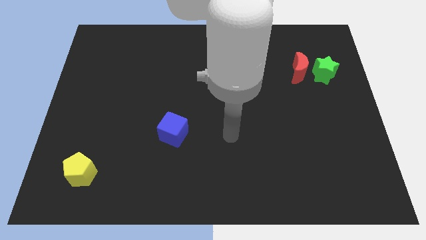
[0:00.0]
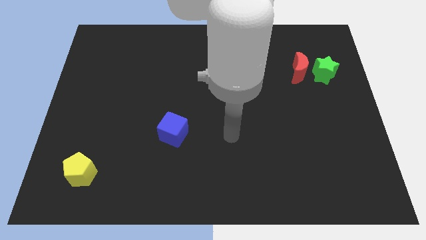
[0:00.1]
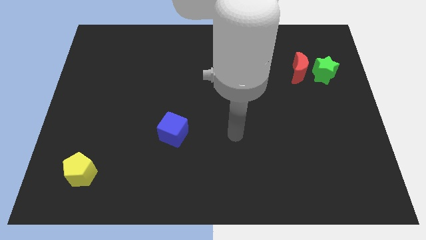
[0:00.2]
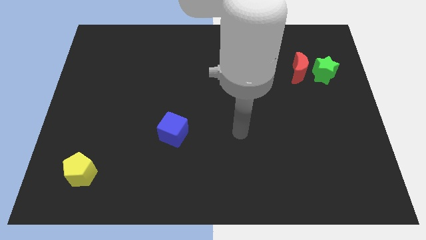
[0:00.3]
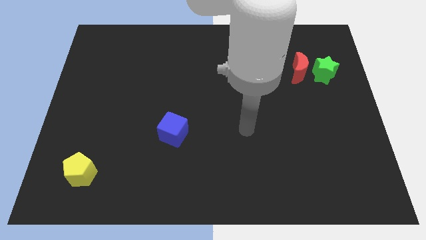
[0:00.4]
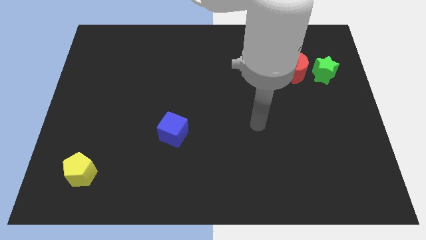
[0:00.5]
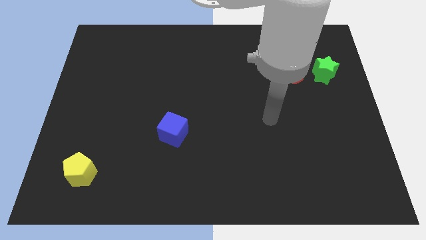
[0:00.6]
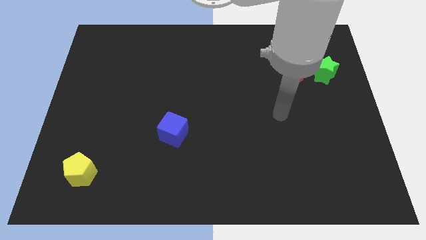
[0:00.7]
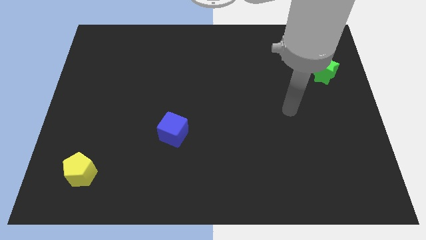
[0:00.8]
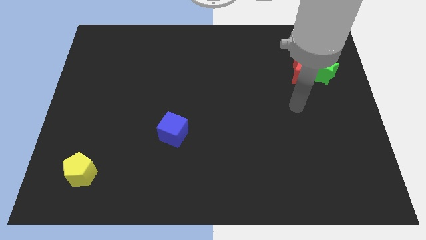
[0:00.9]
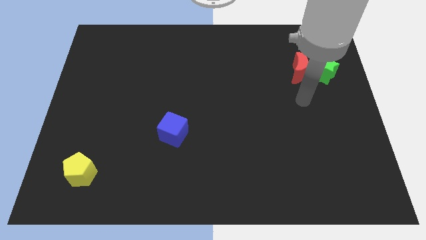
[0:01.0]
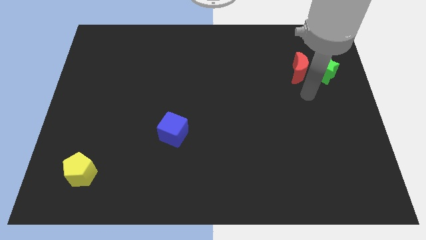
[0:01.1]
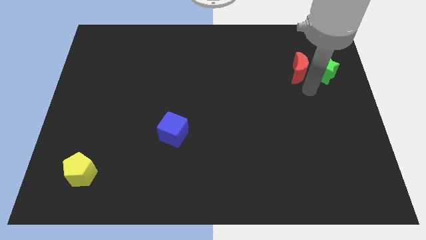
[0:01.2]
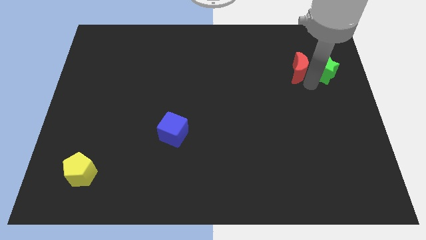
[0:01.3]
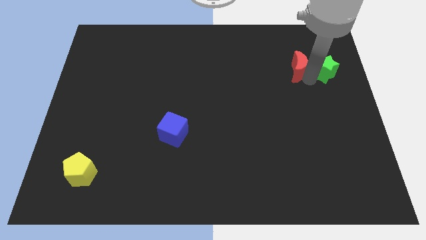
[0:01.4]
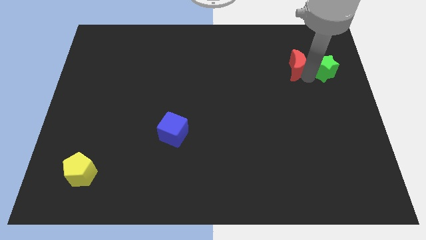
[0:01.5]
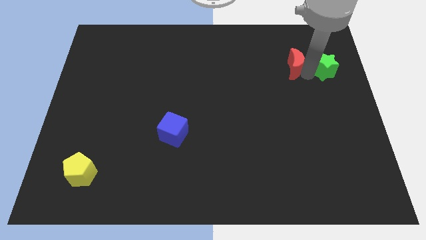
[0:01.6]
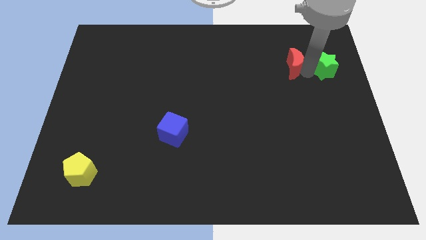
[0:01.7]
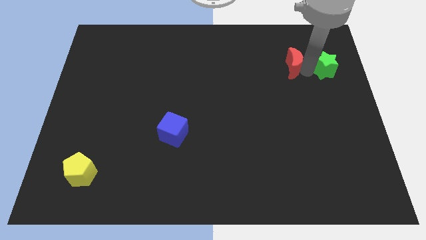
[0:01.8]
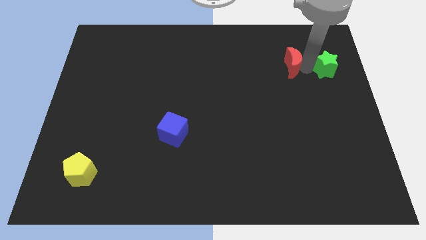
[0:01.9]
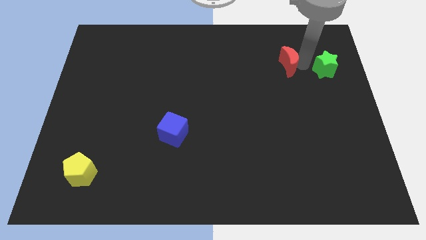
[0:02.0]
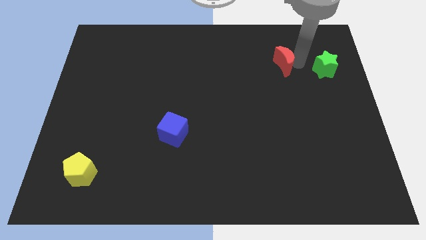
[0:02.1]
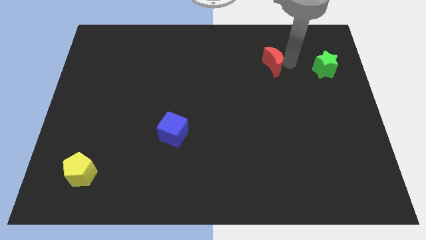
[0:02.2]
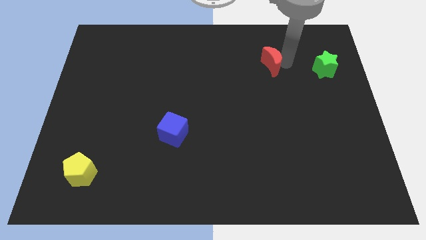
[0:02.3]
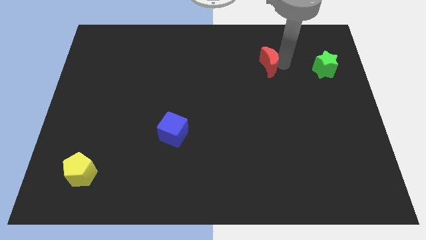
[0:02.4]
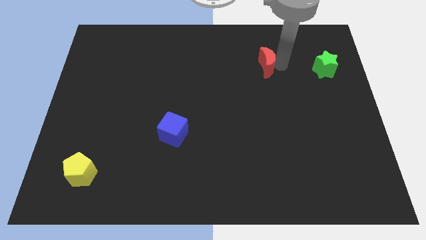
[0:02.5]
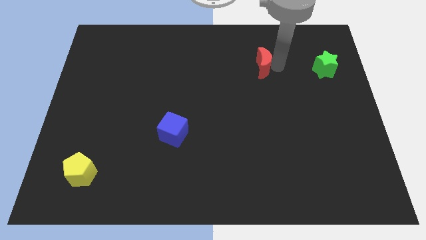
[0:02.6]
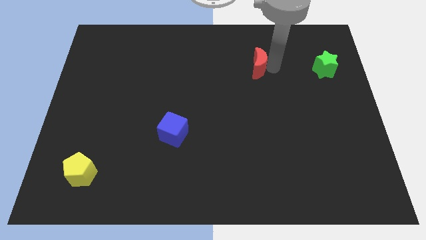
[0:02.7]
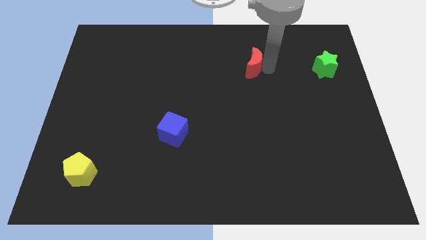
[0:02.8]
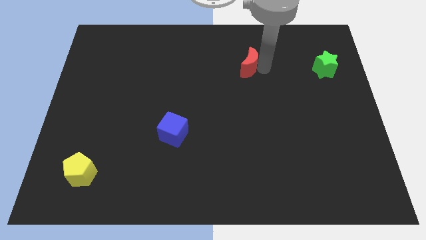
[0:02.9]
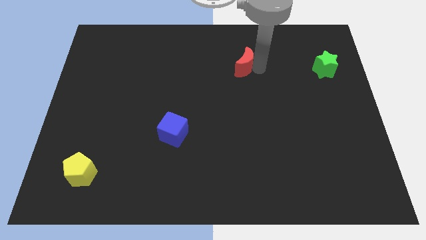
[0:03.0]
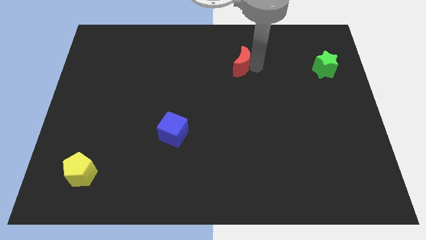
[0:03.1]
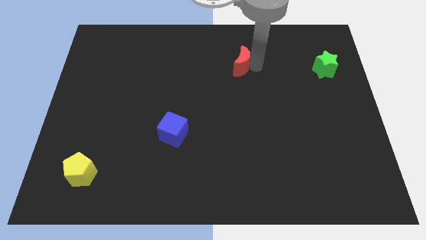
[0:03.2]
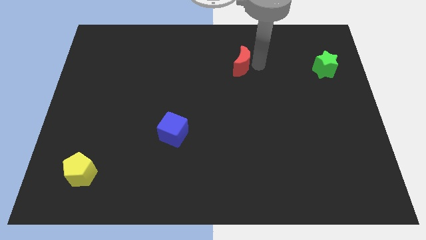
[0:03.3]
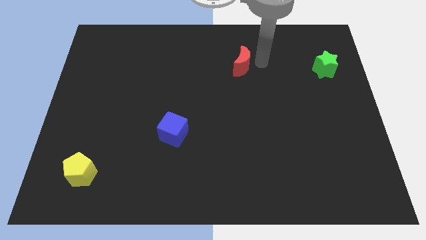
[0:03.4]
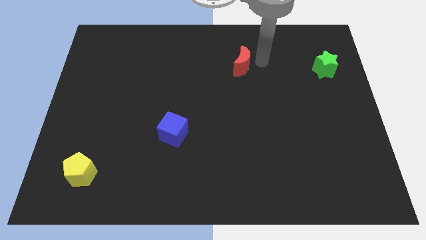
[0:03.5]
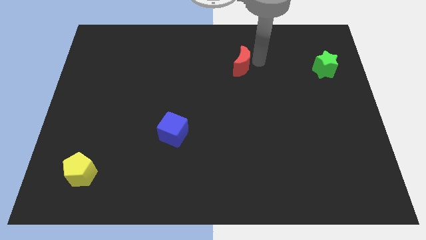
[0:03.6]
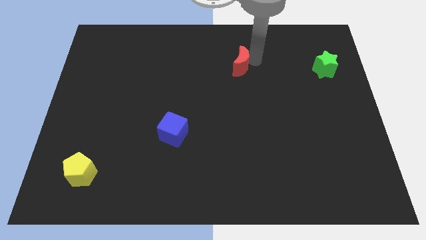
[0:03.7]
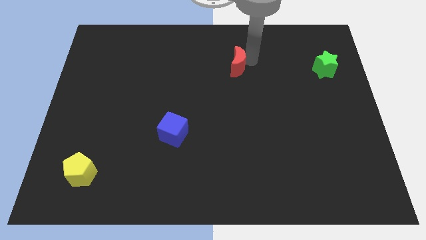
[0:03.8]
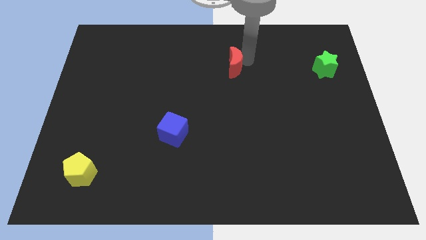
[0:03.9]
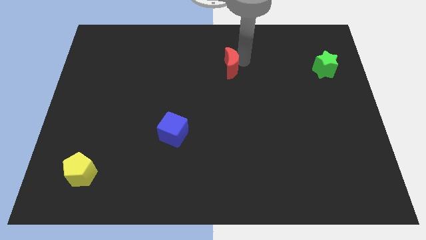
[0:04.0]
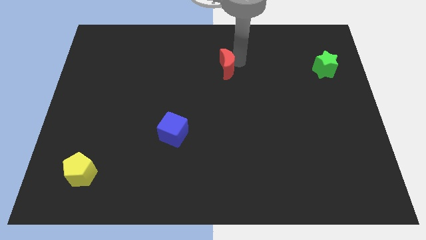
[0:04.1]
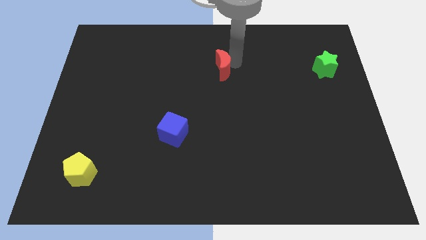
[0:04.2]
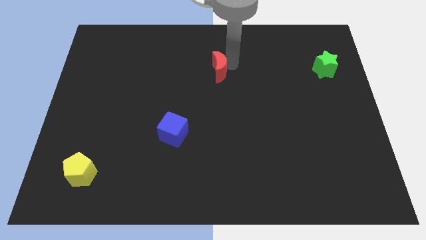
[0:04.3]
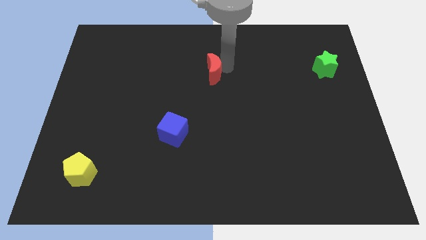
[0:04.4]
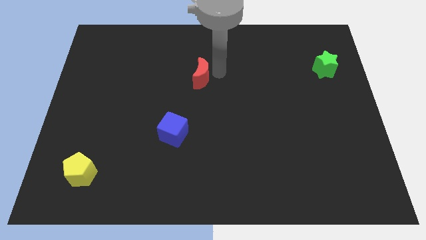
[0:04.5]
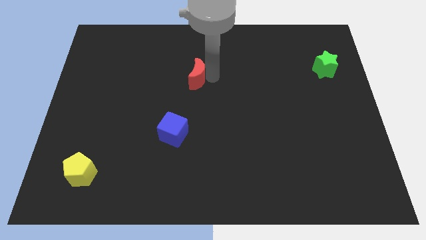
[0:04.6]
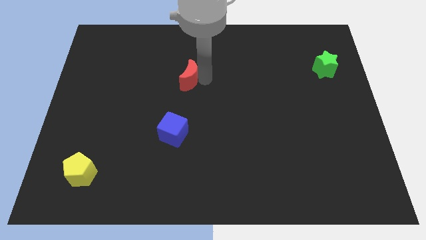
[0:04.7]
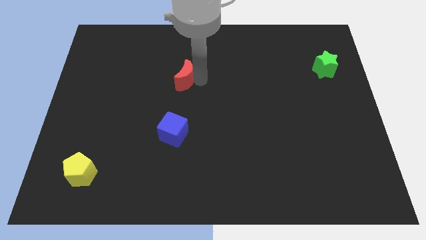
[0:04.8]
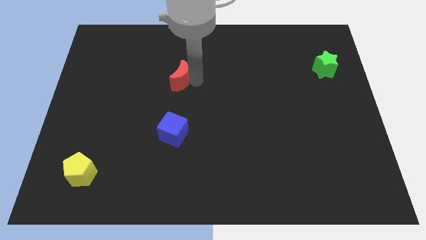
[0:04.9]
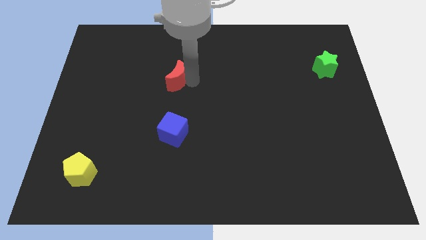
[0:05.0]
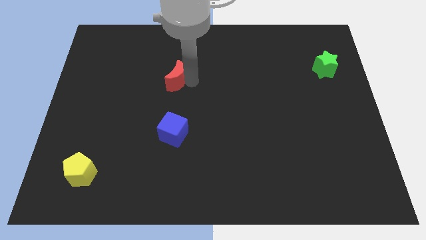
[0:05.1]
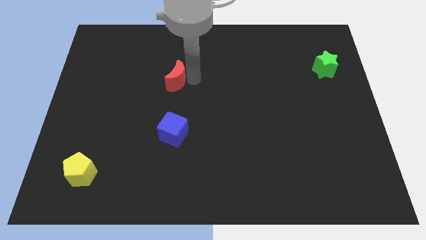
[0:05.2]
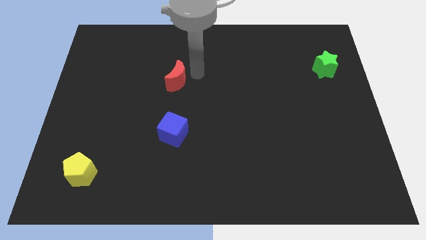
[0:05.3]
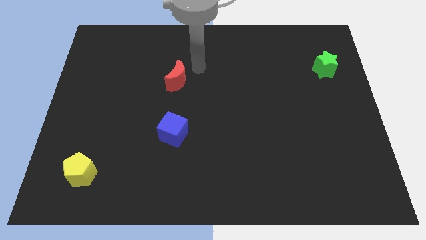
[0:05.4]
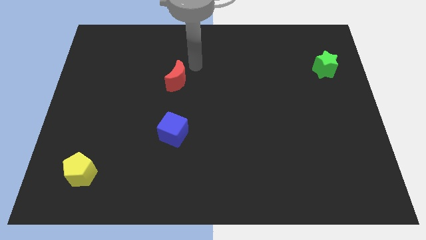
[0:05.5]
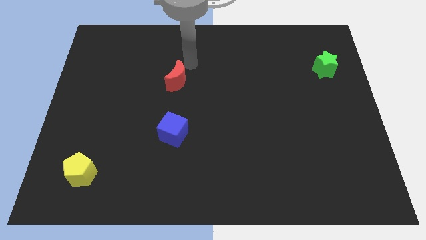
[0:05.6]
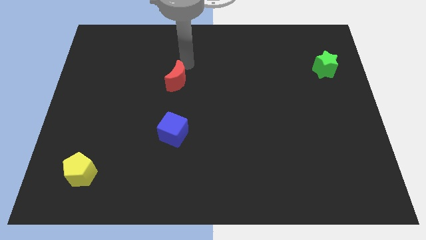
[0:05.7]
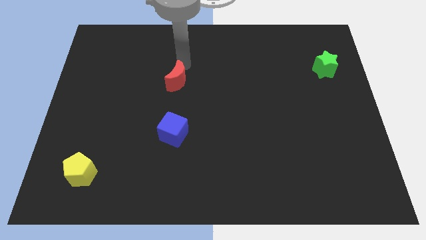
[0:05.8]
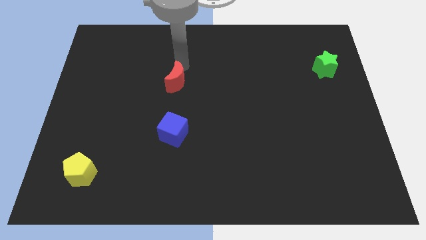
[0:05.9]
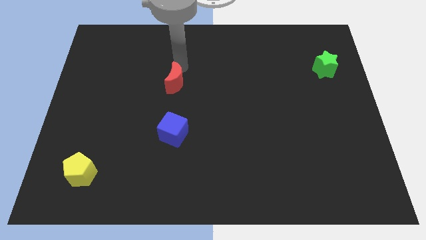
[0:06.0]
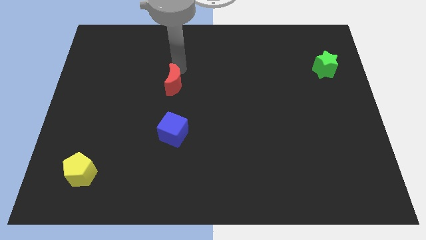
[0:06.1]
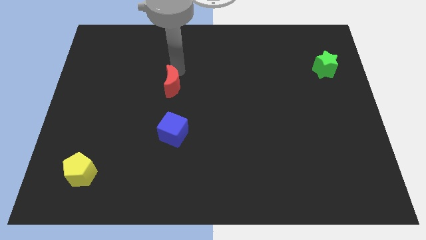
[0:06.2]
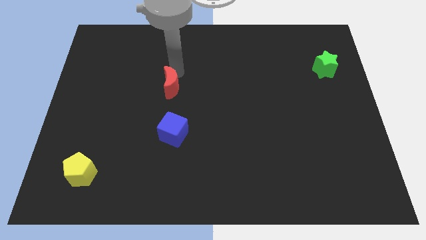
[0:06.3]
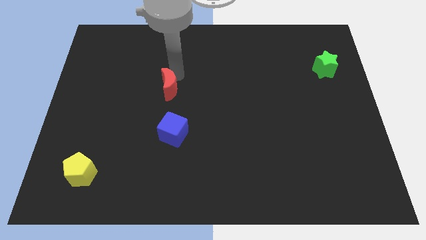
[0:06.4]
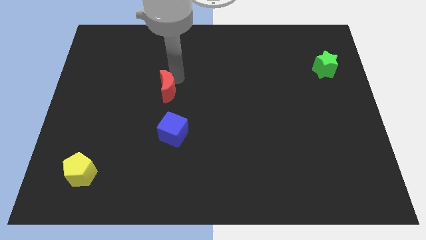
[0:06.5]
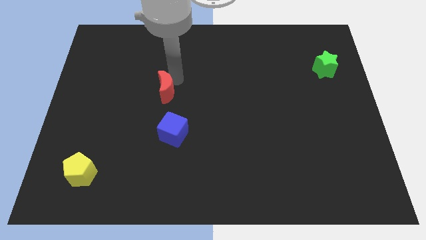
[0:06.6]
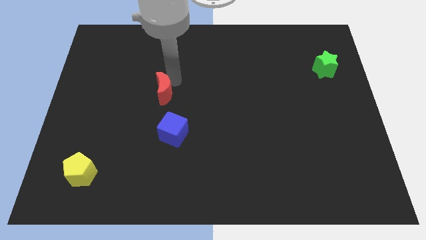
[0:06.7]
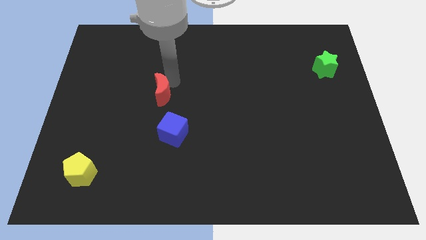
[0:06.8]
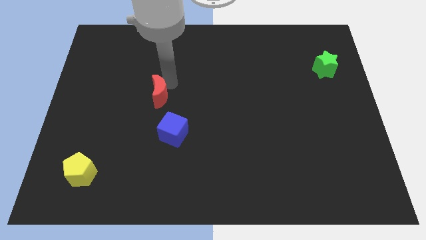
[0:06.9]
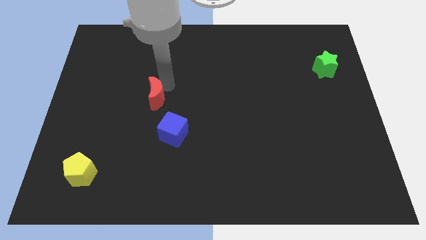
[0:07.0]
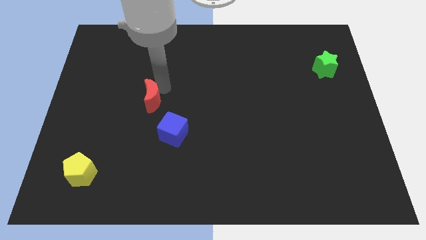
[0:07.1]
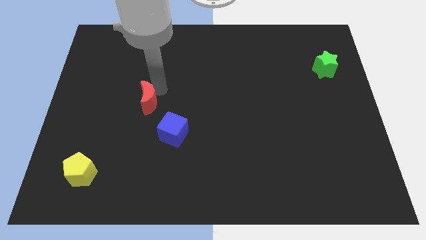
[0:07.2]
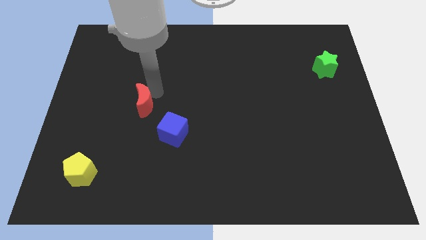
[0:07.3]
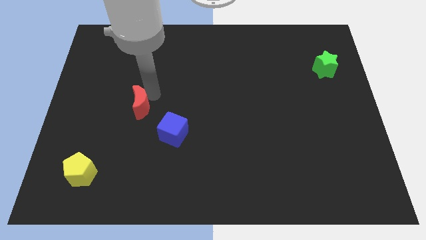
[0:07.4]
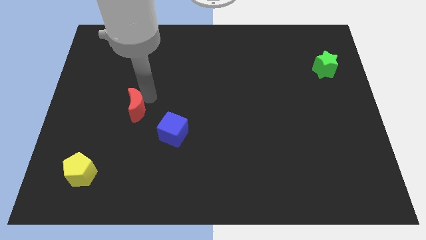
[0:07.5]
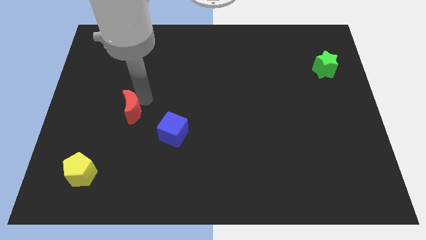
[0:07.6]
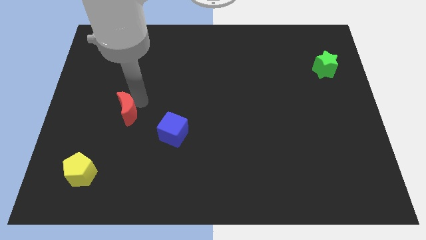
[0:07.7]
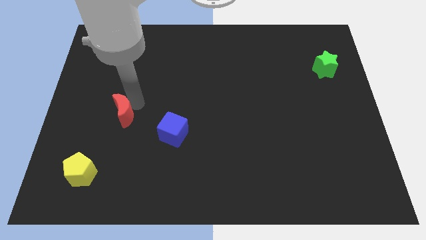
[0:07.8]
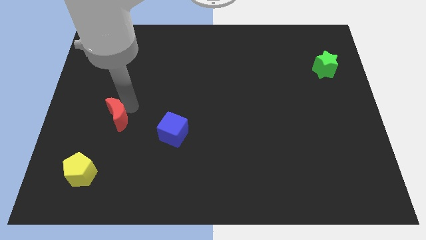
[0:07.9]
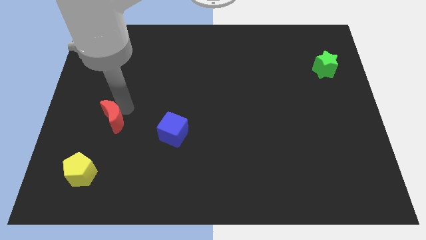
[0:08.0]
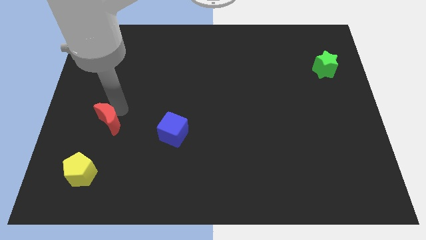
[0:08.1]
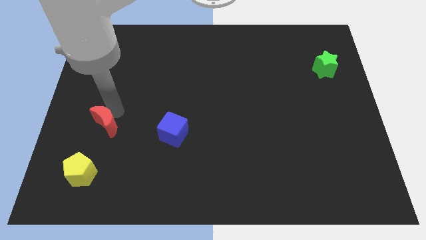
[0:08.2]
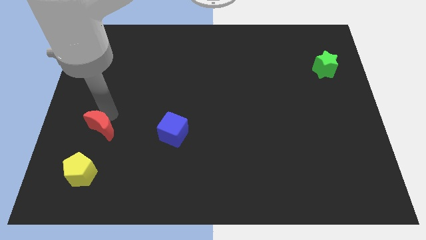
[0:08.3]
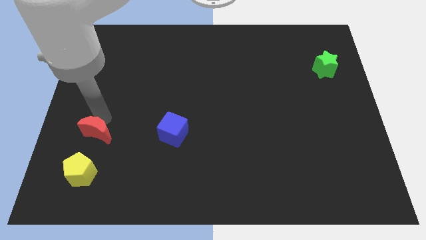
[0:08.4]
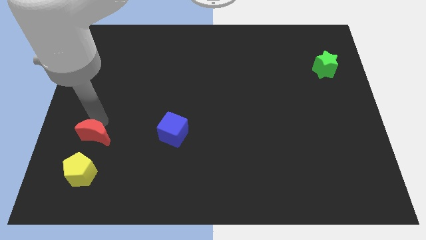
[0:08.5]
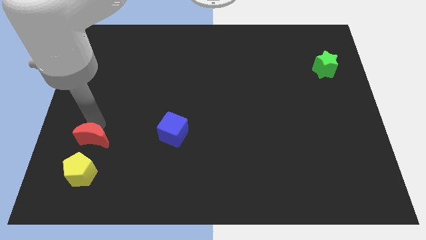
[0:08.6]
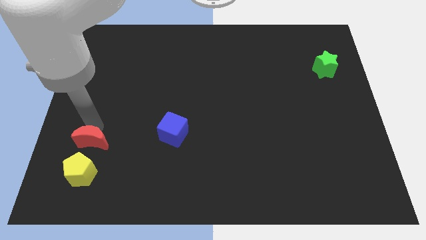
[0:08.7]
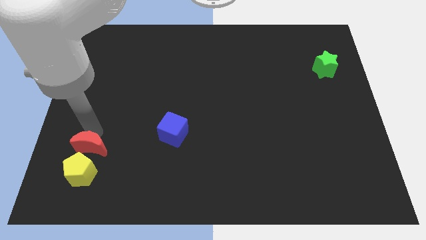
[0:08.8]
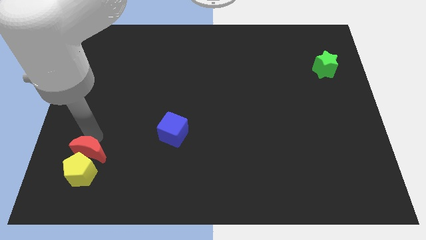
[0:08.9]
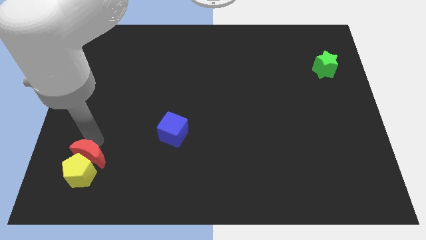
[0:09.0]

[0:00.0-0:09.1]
push the moon close to the yellow pentagon
